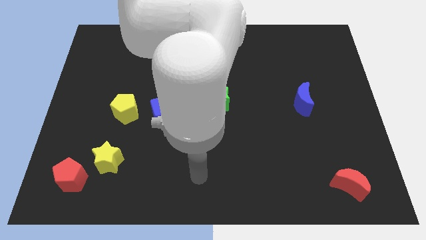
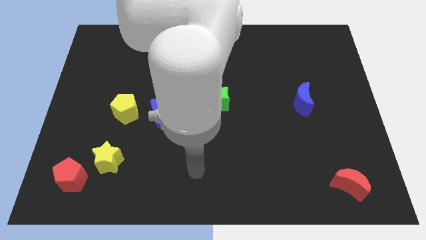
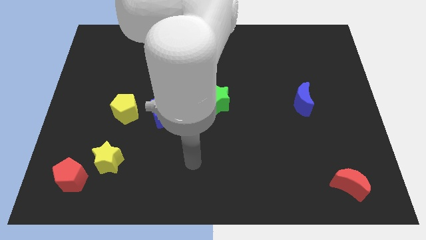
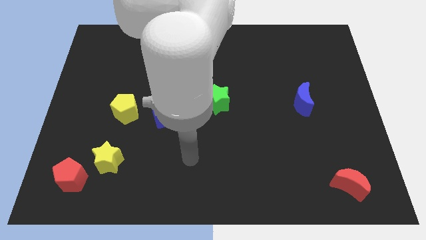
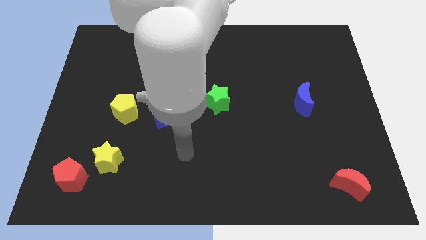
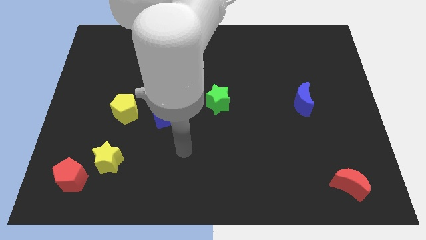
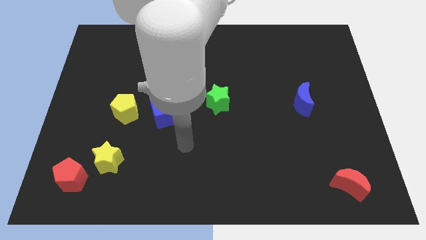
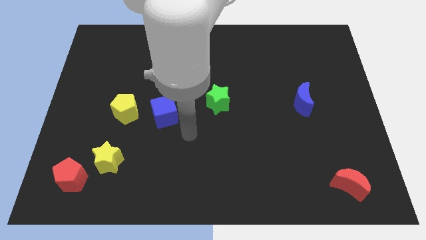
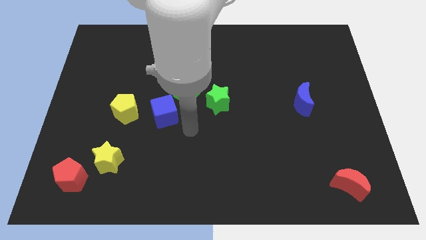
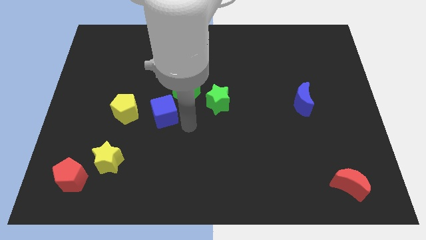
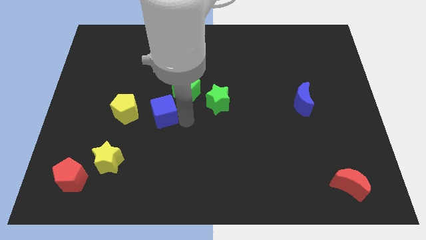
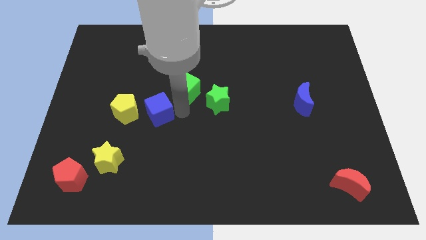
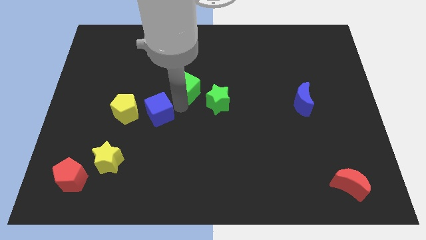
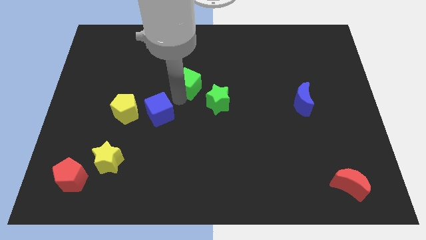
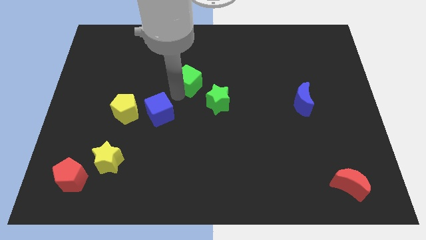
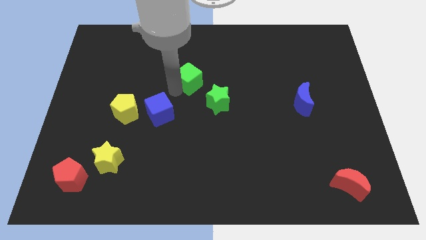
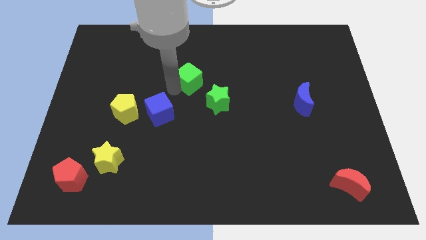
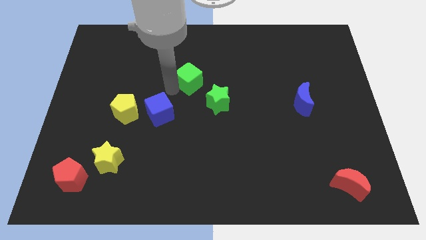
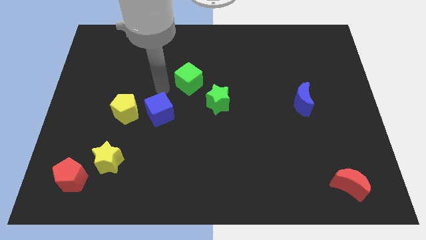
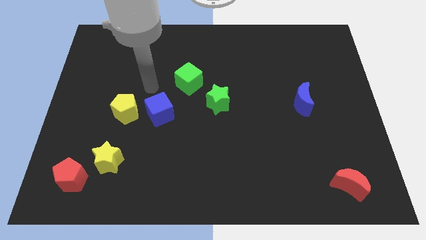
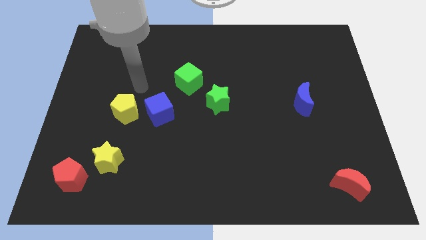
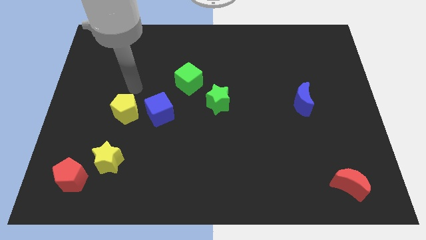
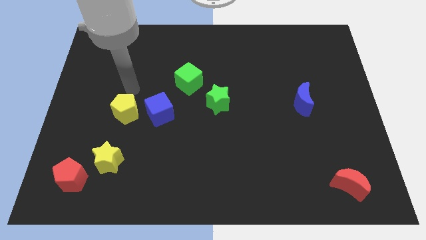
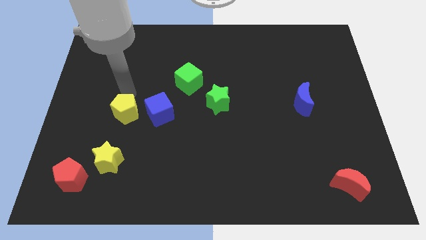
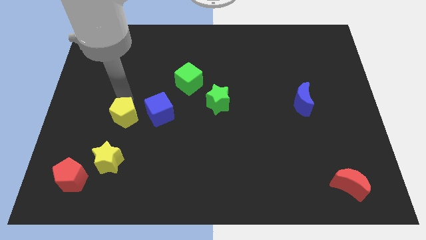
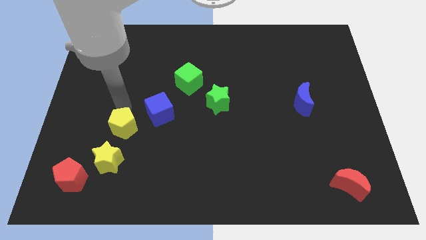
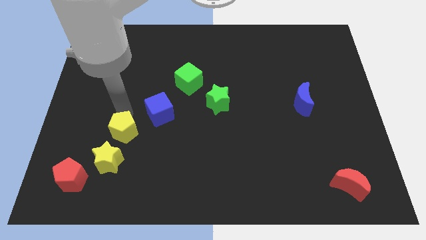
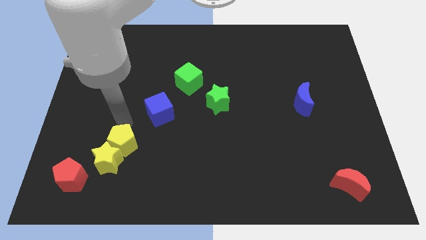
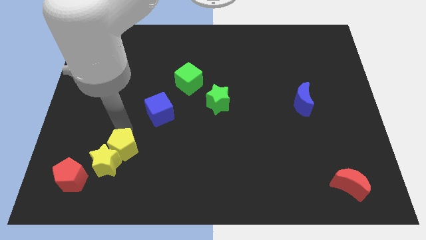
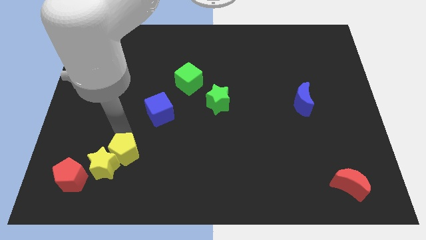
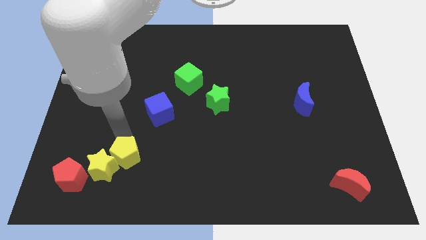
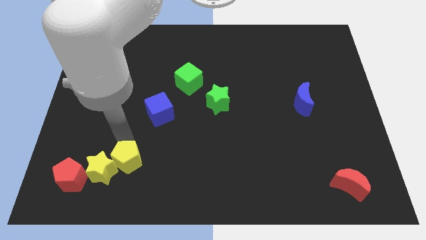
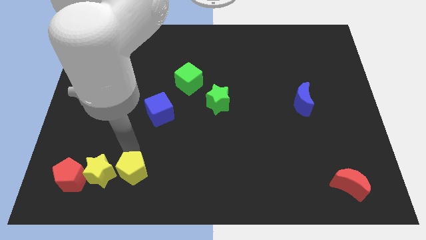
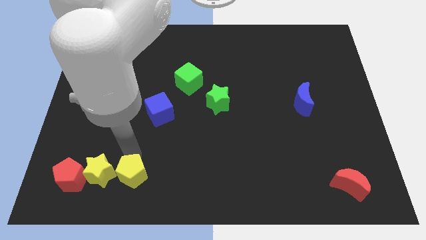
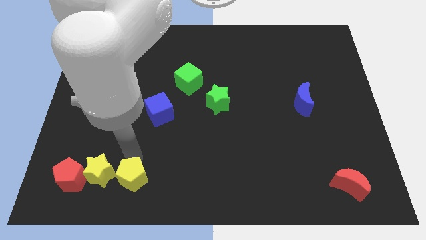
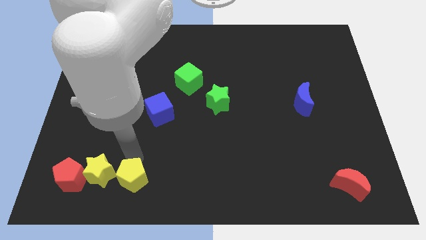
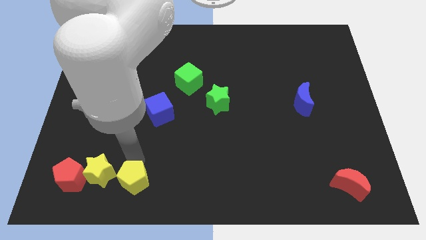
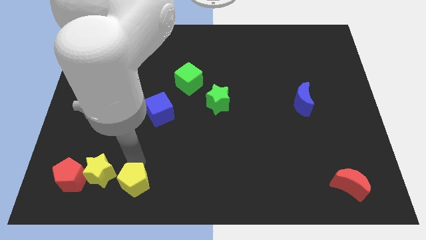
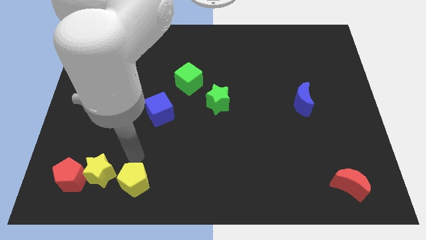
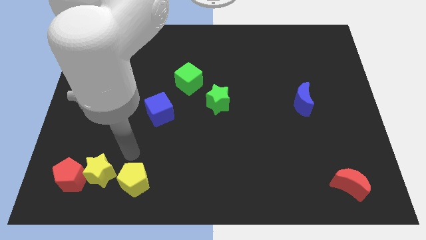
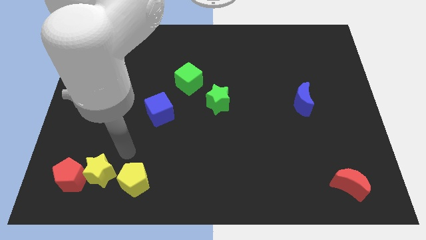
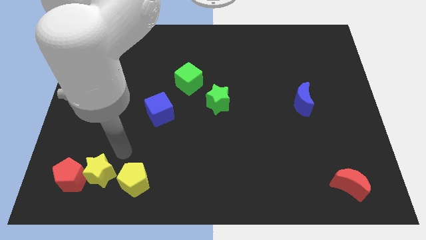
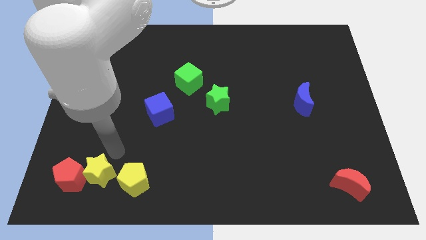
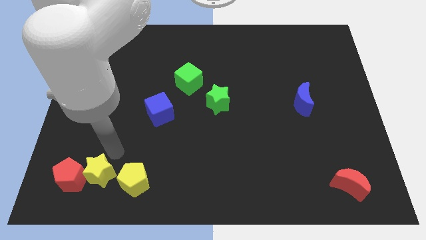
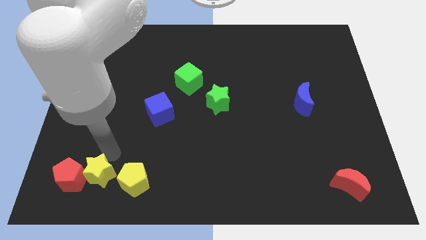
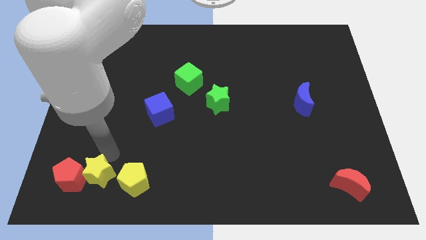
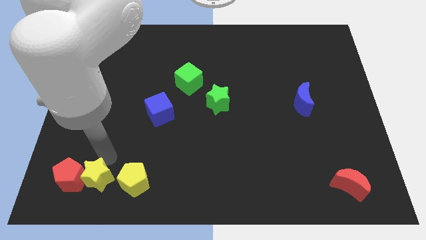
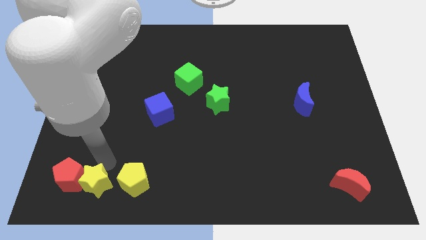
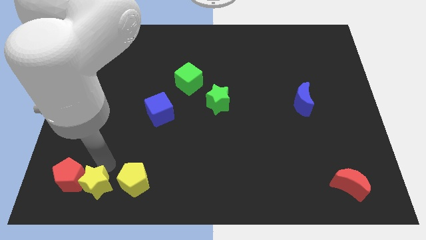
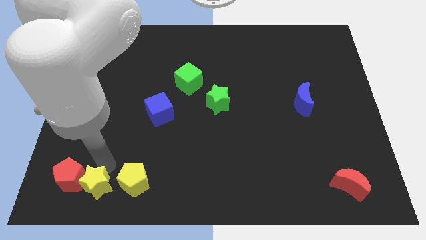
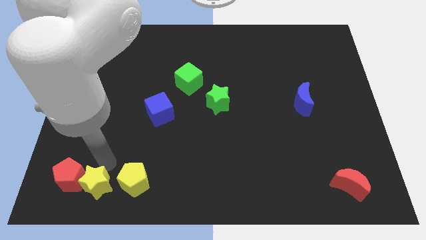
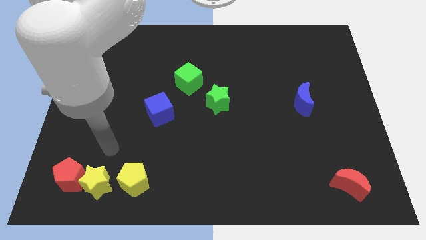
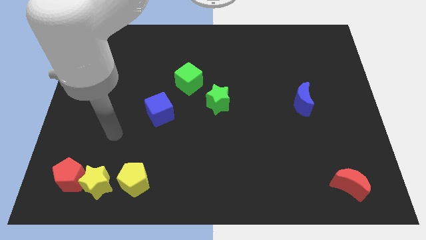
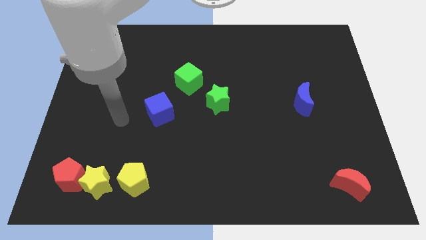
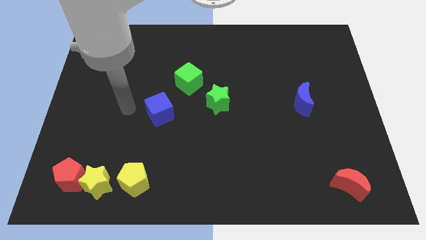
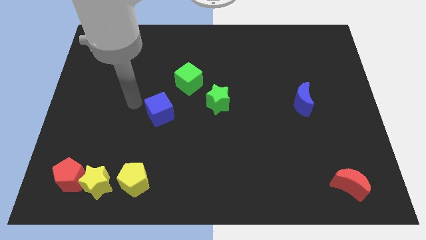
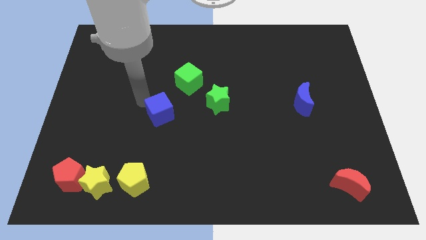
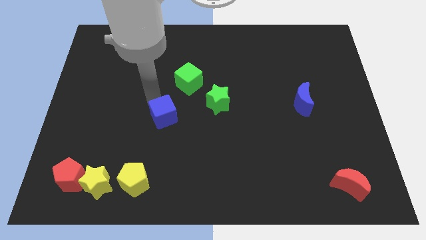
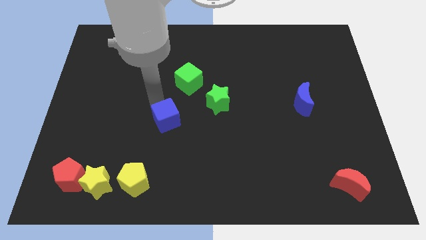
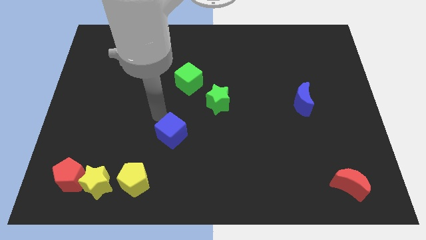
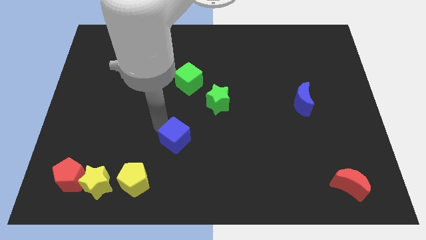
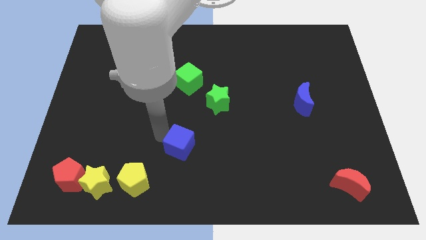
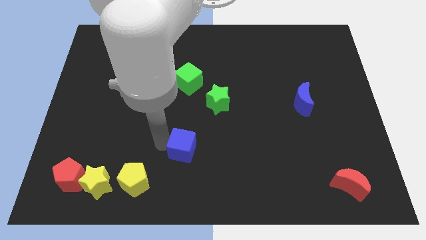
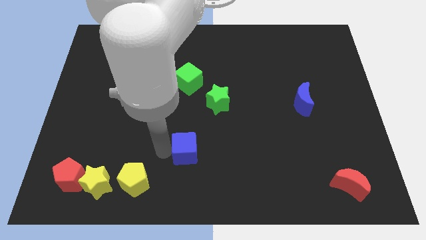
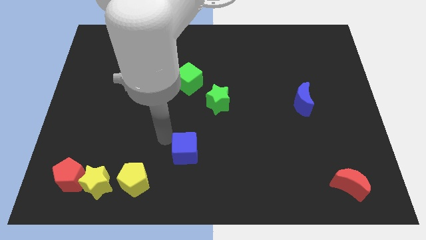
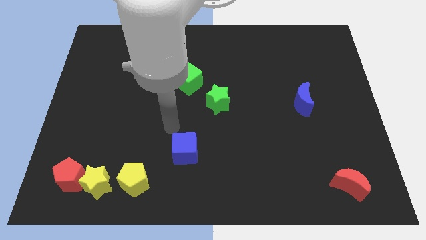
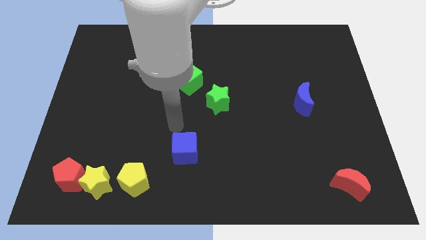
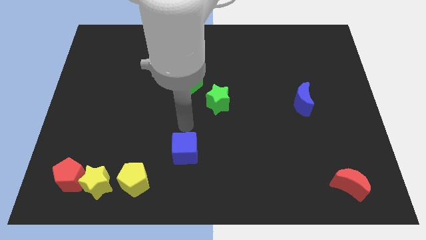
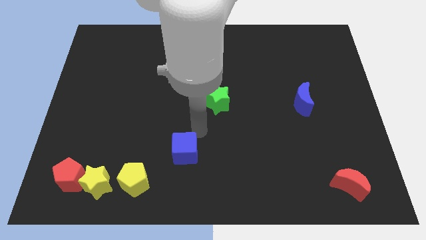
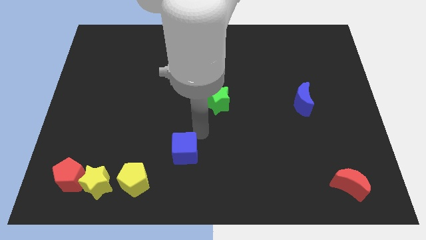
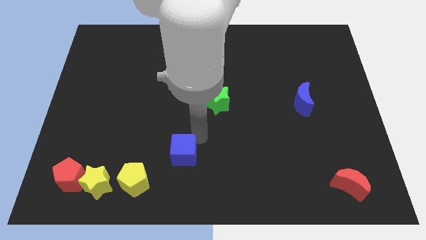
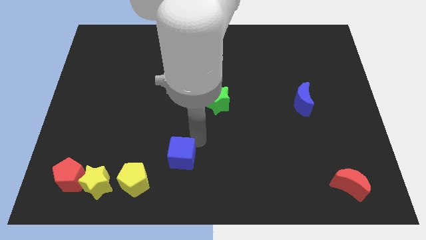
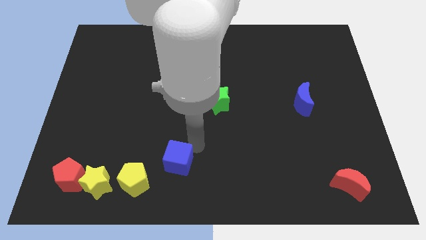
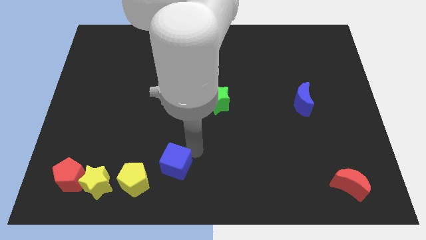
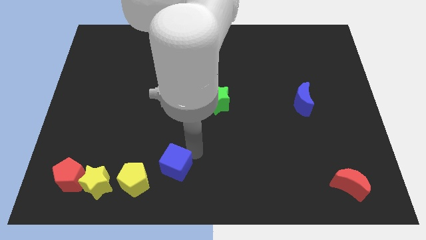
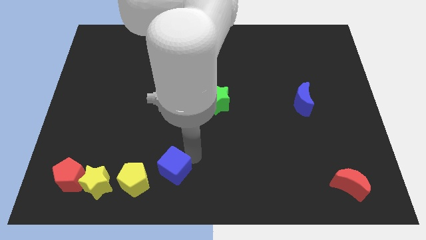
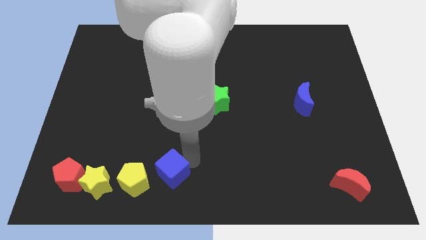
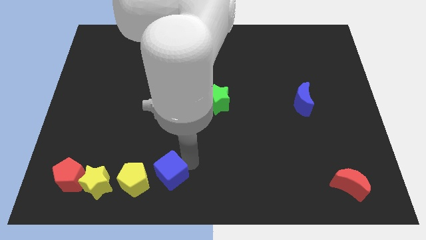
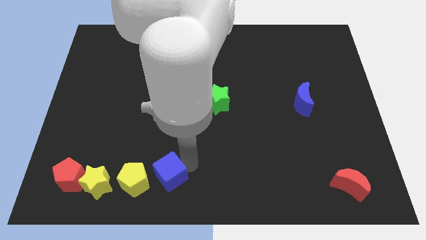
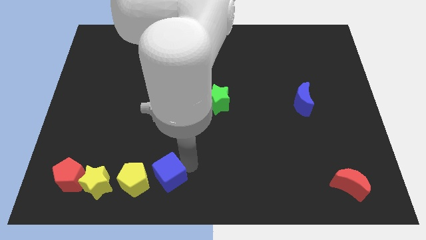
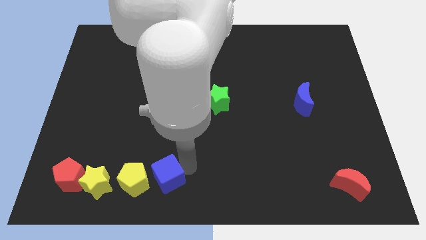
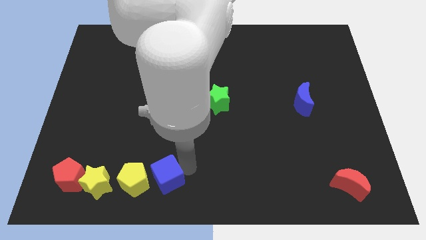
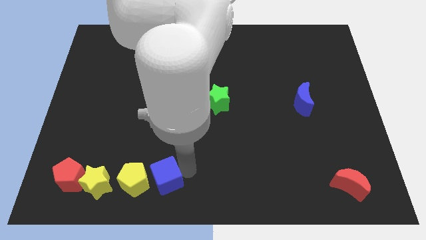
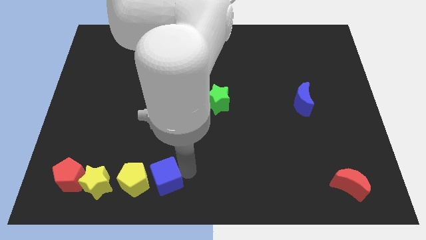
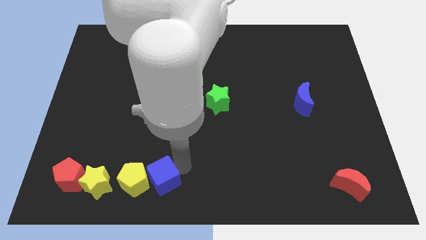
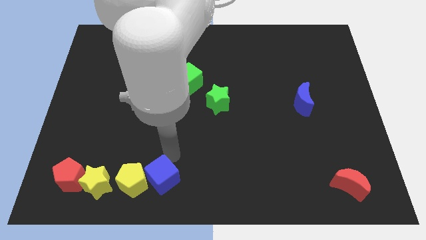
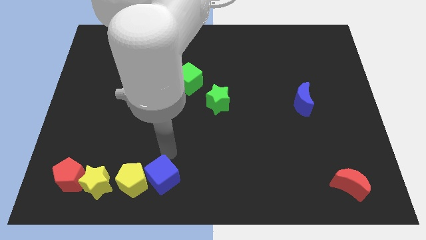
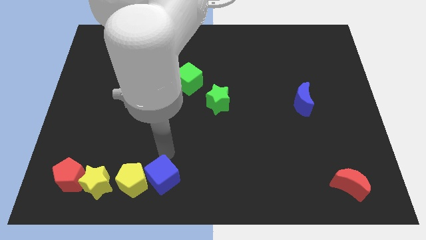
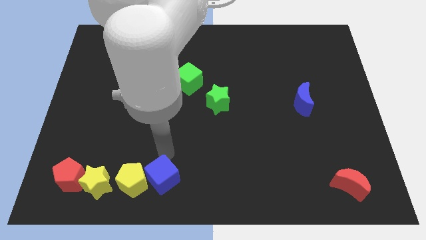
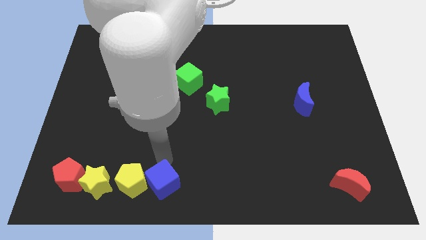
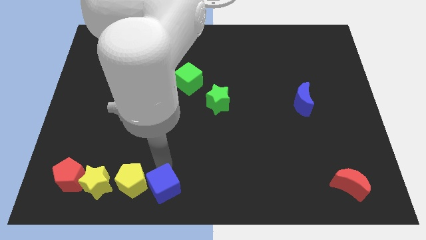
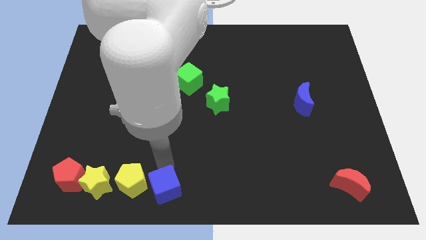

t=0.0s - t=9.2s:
make a horizontal line with the red pentagon yellow blocks and blue cube at the bottom side of the table
